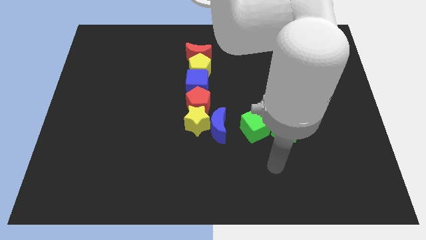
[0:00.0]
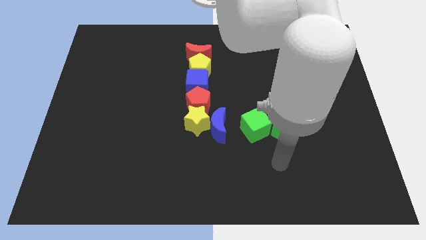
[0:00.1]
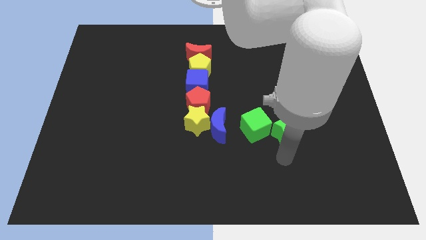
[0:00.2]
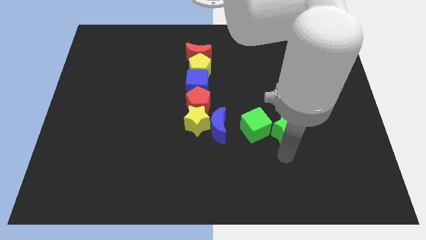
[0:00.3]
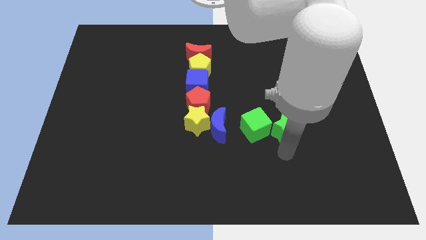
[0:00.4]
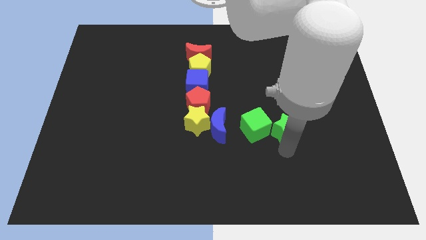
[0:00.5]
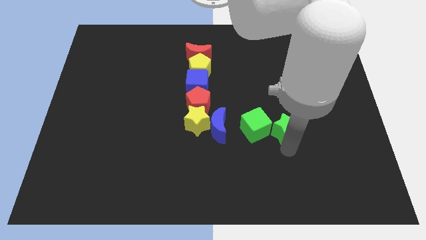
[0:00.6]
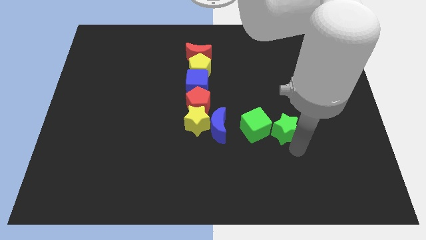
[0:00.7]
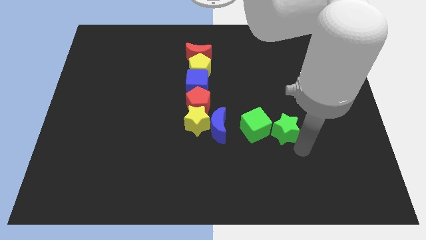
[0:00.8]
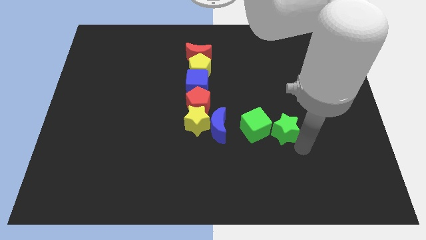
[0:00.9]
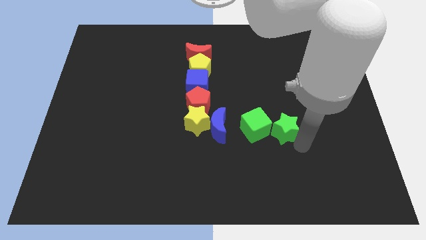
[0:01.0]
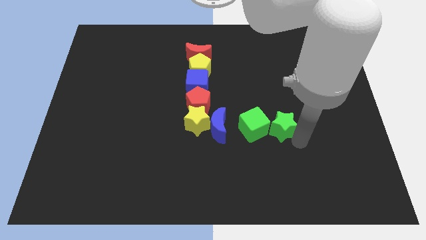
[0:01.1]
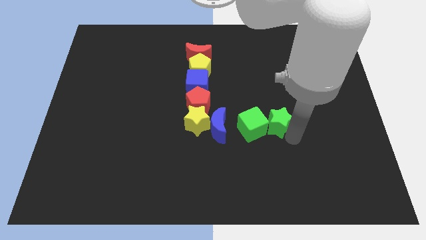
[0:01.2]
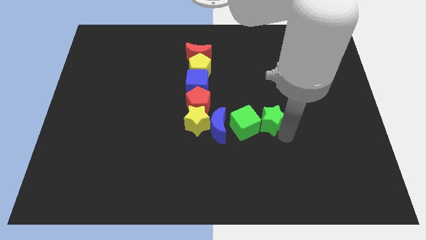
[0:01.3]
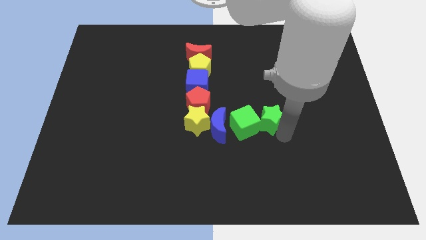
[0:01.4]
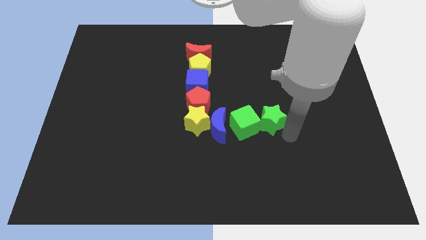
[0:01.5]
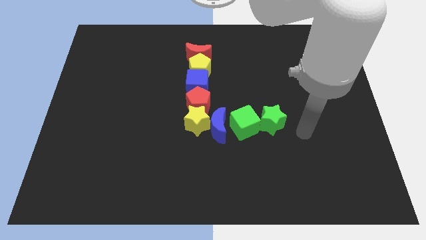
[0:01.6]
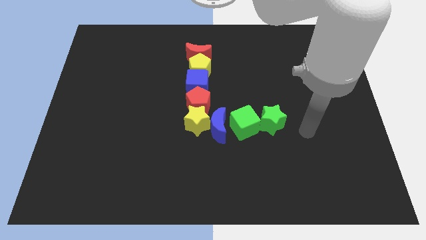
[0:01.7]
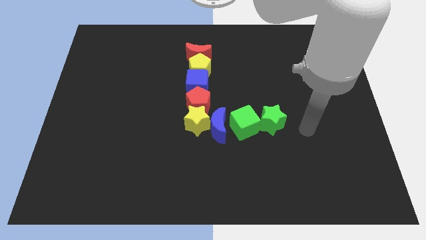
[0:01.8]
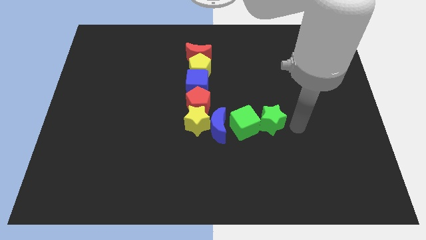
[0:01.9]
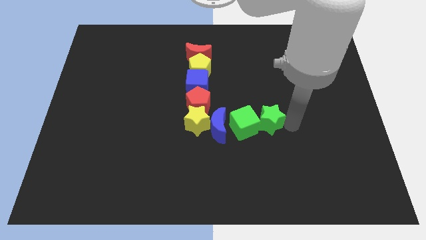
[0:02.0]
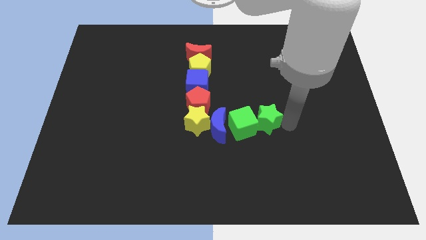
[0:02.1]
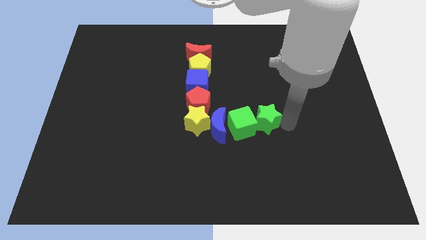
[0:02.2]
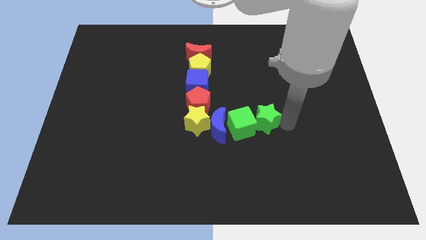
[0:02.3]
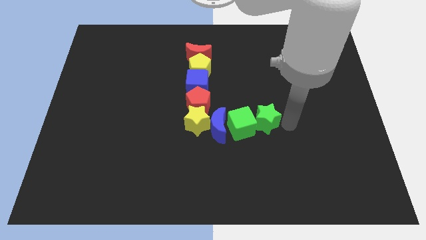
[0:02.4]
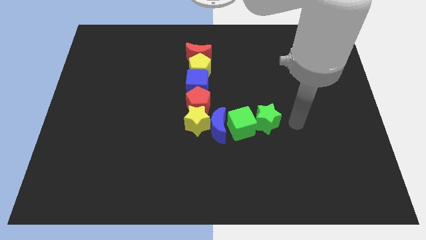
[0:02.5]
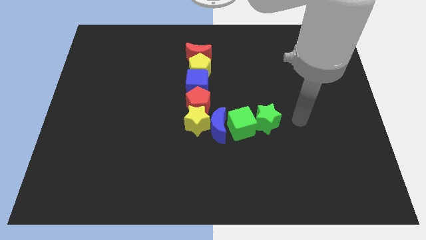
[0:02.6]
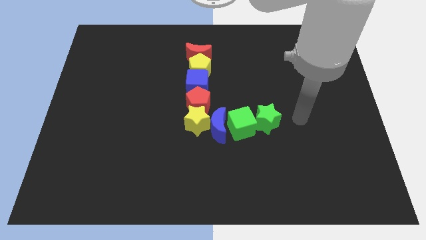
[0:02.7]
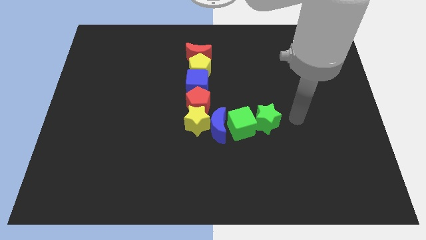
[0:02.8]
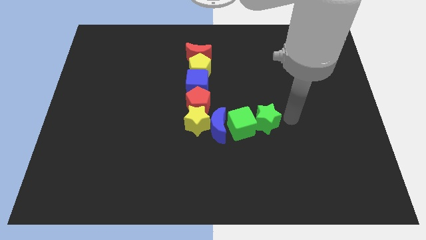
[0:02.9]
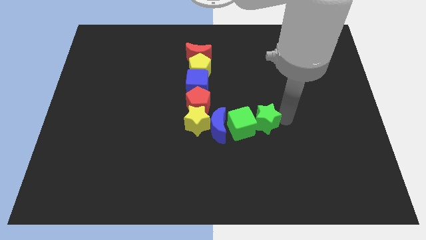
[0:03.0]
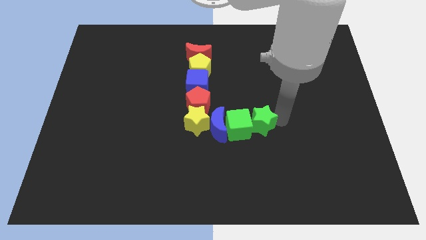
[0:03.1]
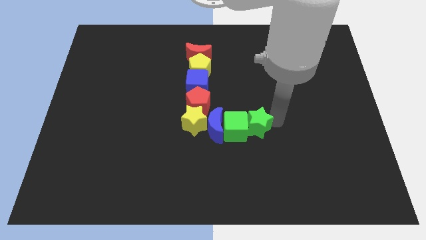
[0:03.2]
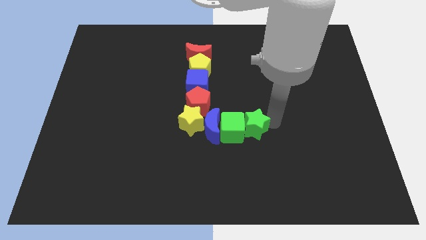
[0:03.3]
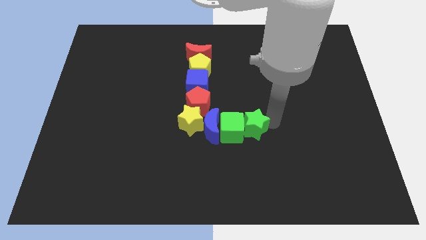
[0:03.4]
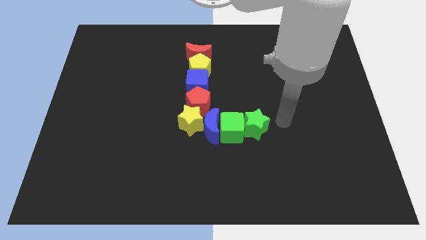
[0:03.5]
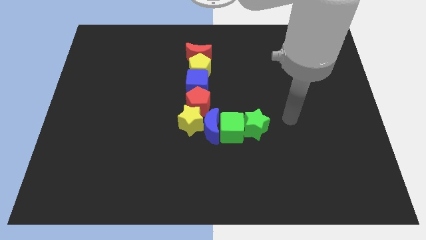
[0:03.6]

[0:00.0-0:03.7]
push green star into the green block

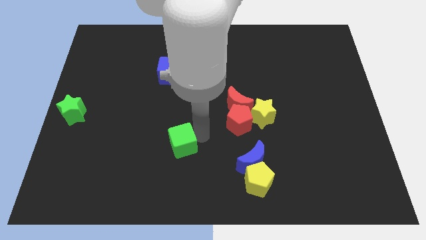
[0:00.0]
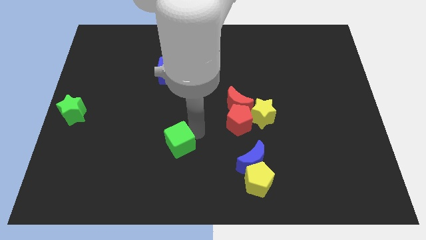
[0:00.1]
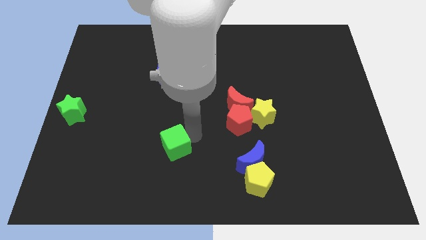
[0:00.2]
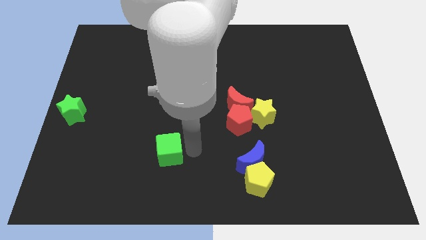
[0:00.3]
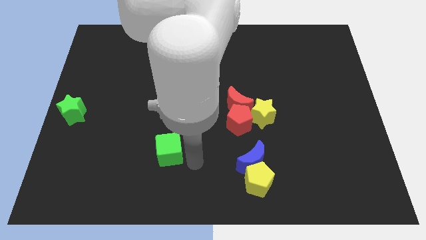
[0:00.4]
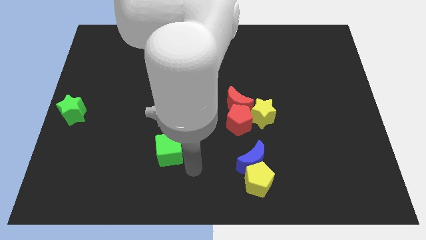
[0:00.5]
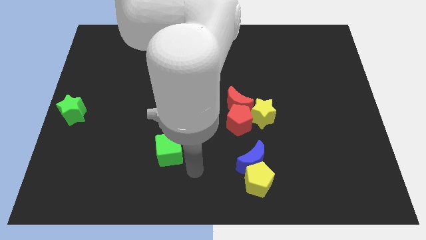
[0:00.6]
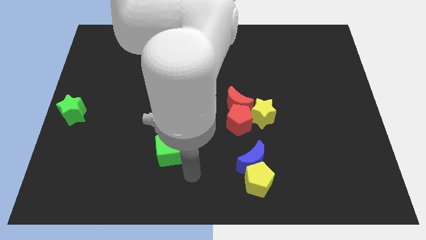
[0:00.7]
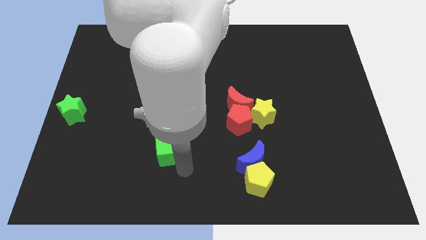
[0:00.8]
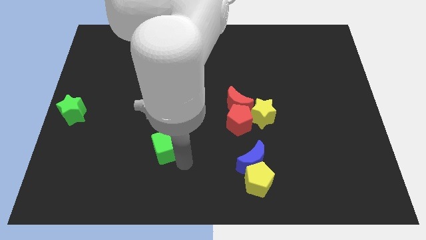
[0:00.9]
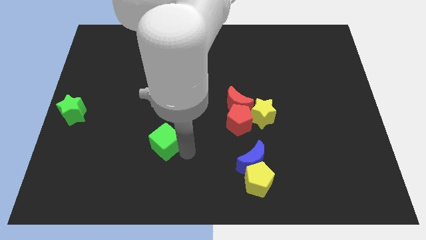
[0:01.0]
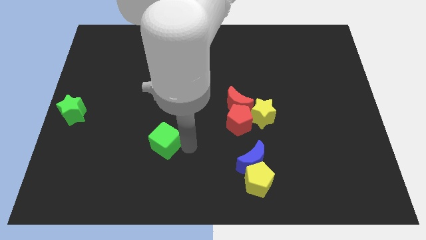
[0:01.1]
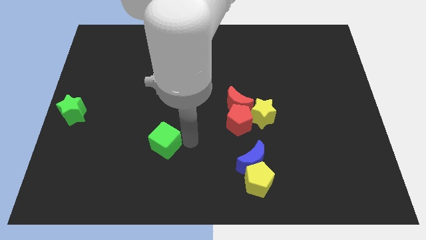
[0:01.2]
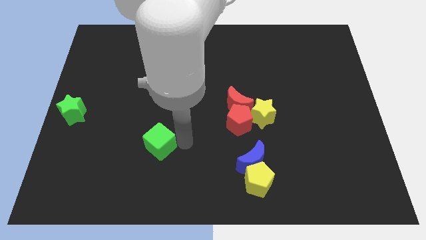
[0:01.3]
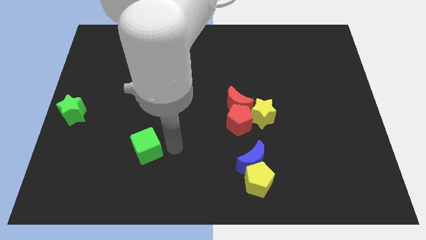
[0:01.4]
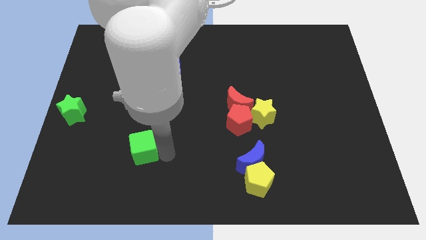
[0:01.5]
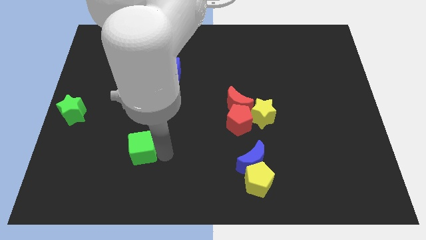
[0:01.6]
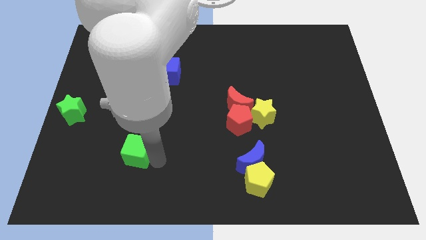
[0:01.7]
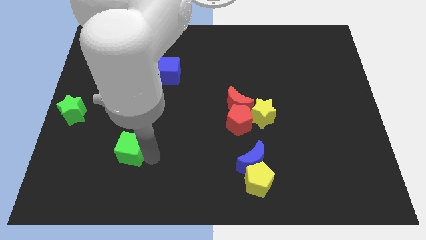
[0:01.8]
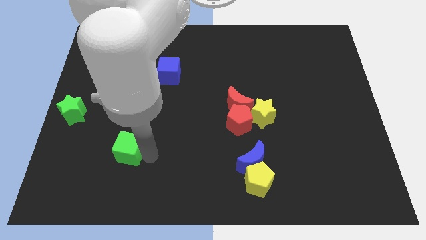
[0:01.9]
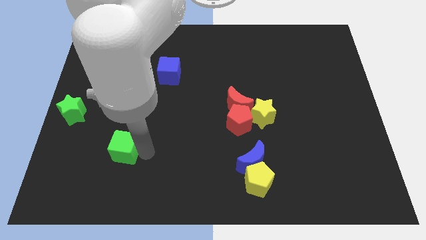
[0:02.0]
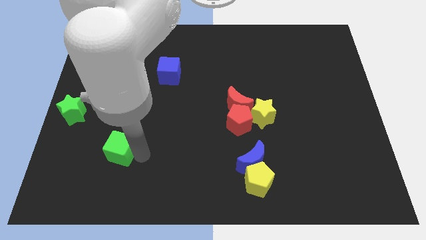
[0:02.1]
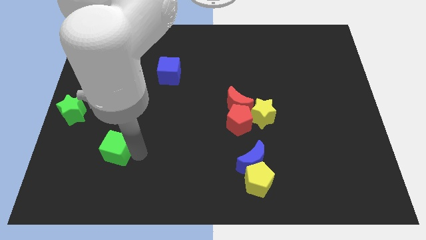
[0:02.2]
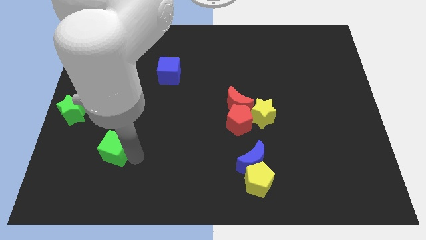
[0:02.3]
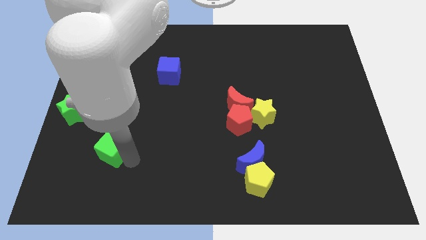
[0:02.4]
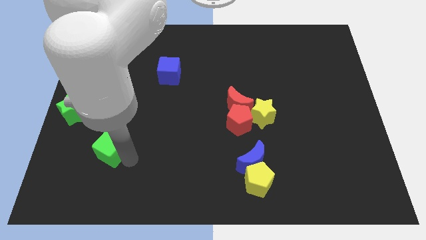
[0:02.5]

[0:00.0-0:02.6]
move the green cube to the bottom right of the green star

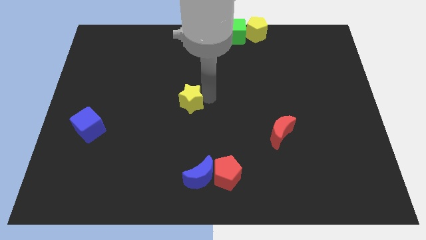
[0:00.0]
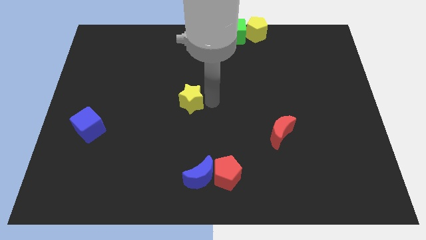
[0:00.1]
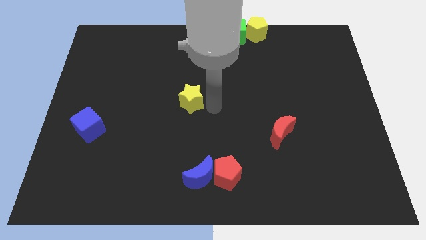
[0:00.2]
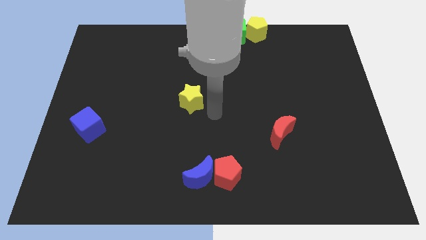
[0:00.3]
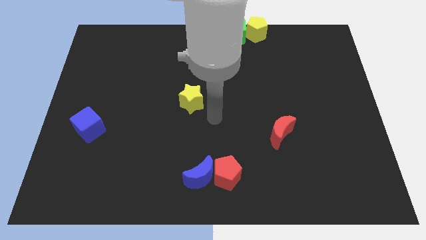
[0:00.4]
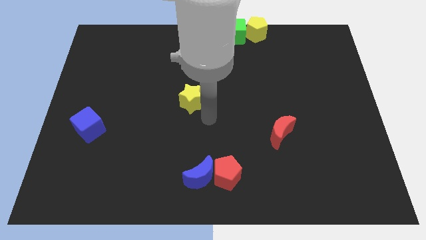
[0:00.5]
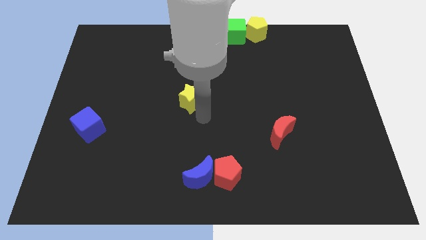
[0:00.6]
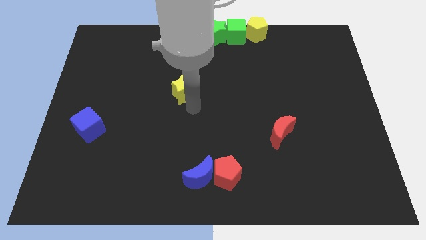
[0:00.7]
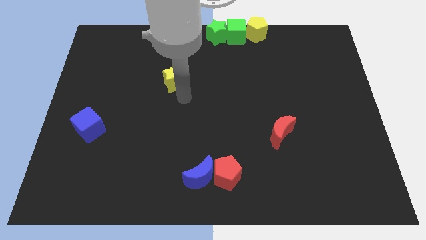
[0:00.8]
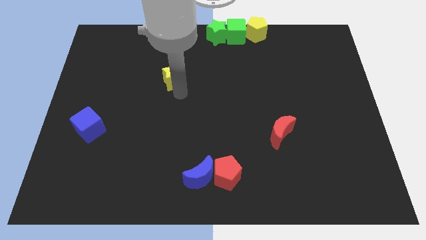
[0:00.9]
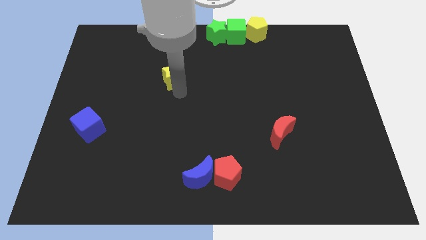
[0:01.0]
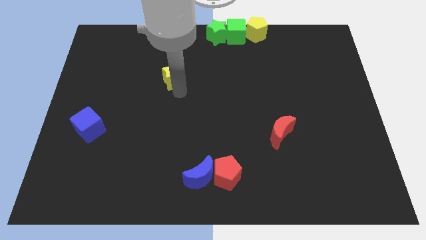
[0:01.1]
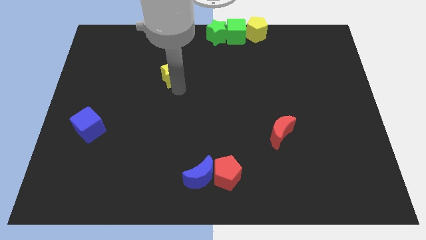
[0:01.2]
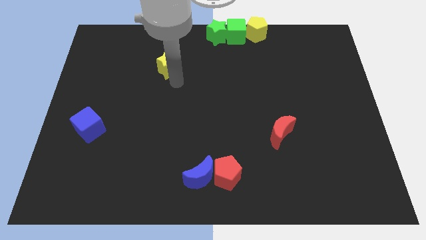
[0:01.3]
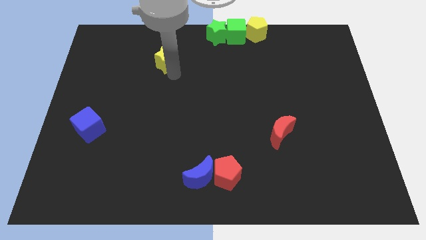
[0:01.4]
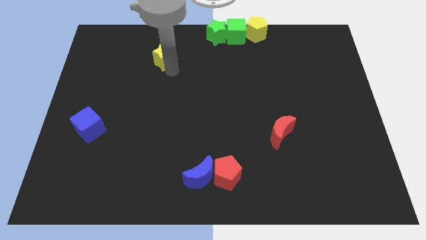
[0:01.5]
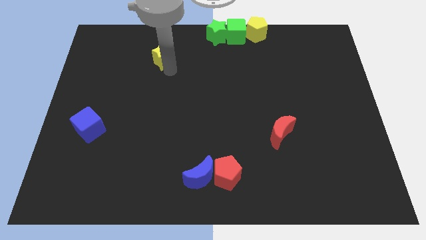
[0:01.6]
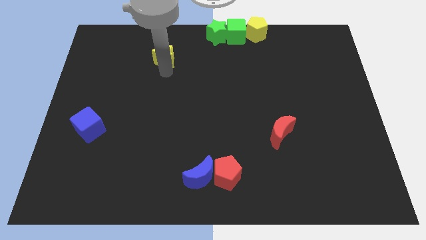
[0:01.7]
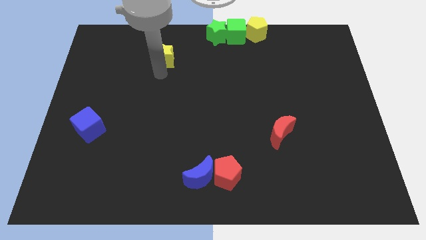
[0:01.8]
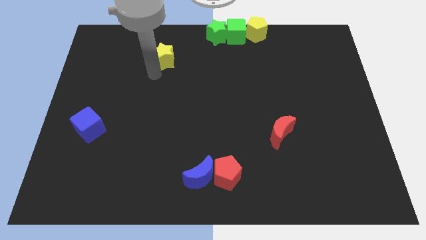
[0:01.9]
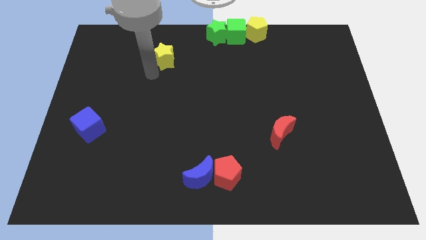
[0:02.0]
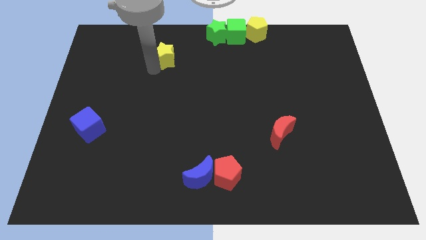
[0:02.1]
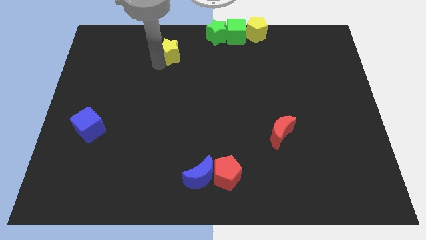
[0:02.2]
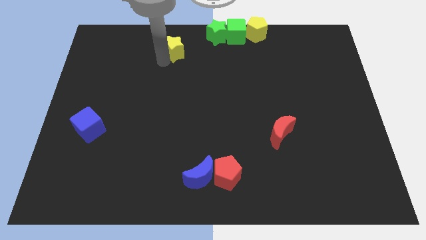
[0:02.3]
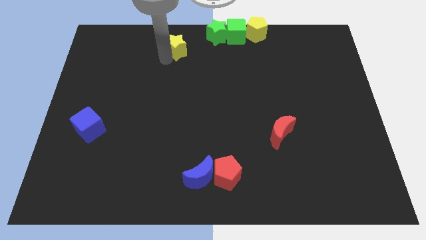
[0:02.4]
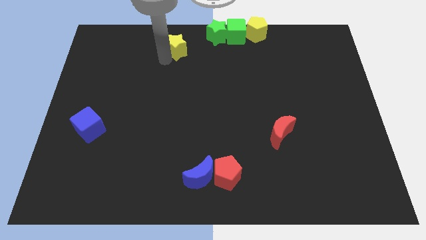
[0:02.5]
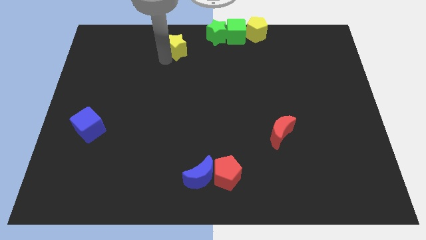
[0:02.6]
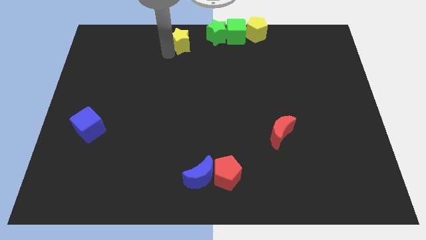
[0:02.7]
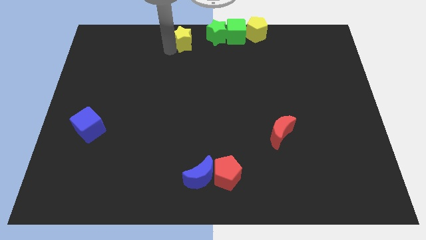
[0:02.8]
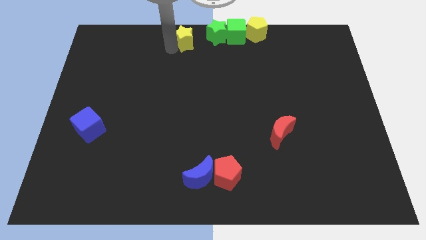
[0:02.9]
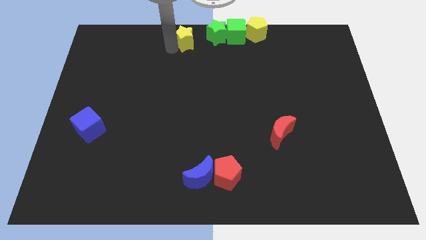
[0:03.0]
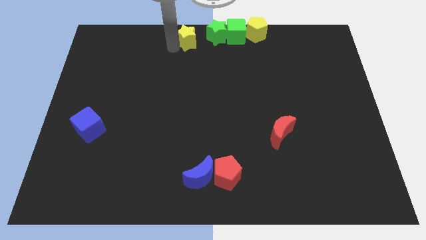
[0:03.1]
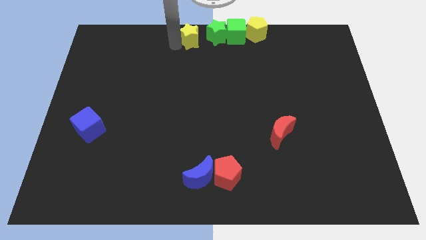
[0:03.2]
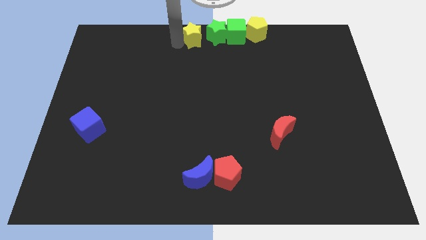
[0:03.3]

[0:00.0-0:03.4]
move the yellow star to the left of the green star
